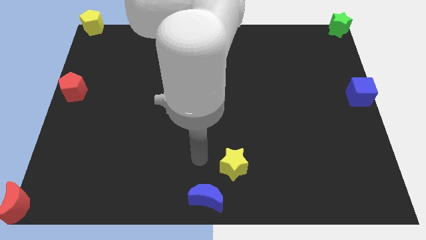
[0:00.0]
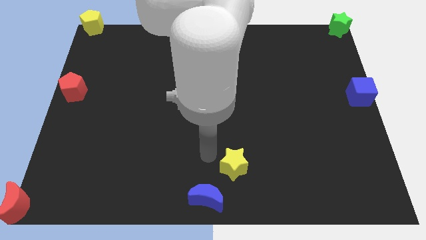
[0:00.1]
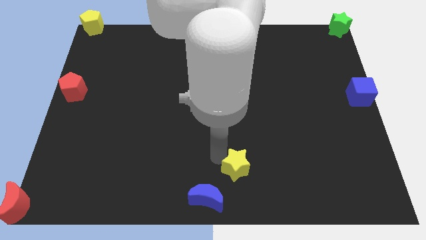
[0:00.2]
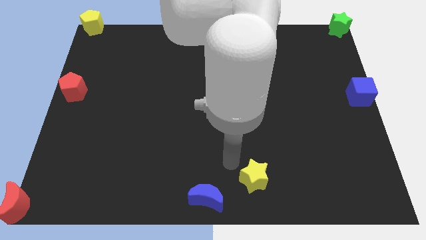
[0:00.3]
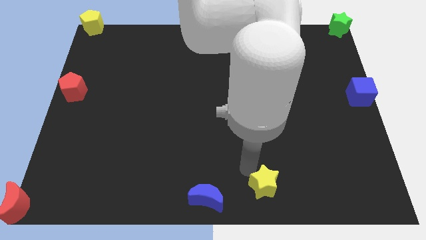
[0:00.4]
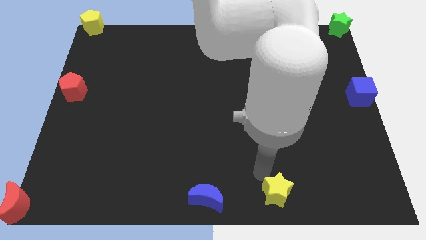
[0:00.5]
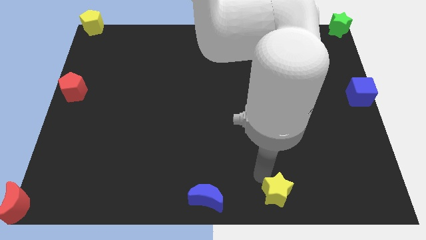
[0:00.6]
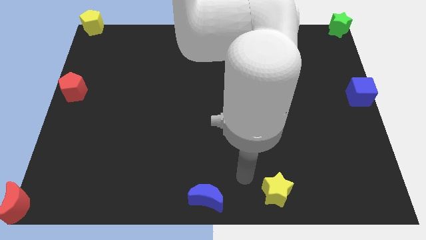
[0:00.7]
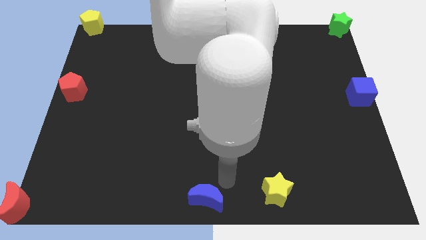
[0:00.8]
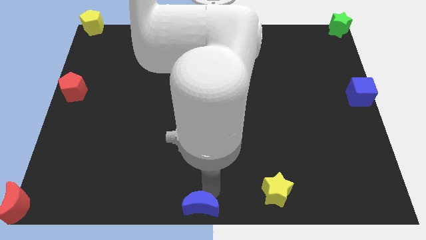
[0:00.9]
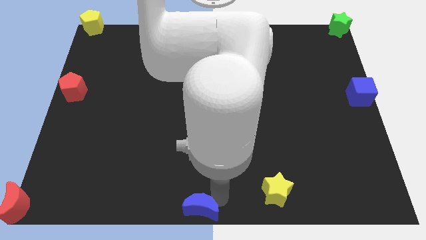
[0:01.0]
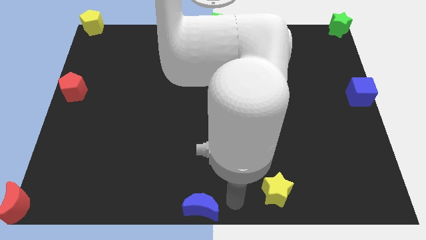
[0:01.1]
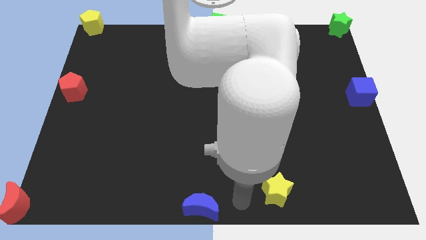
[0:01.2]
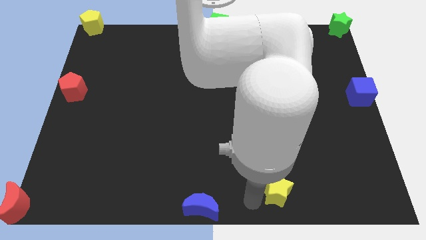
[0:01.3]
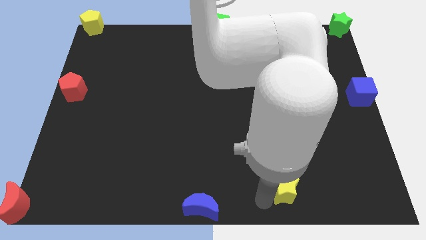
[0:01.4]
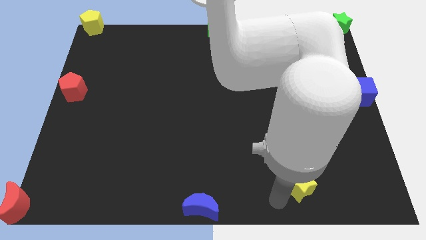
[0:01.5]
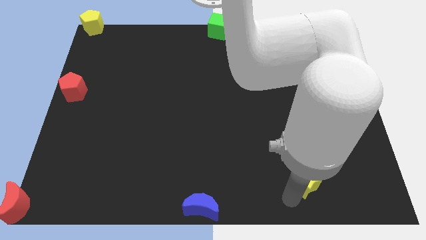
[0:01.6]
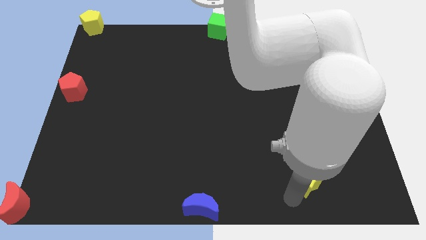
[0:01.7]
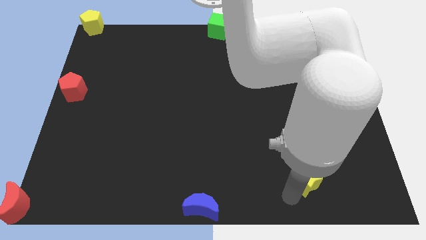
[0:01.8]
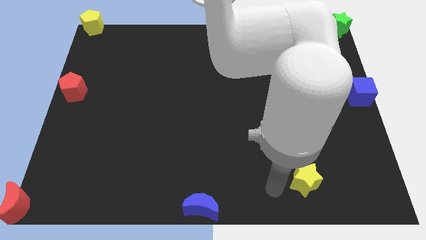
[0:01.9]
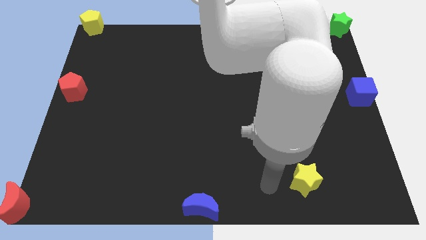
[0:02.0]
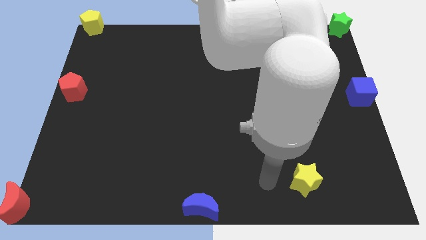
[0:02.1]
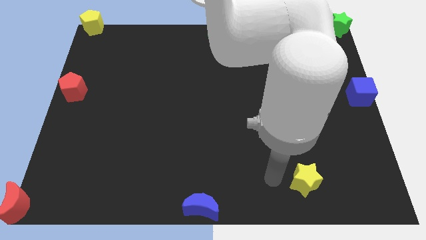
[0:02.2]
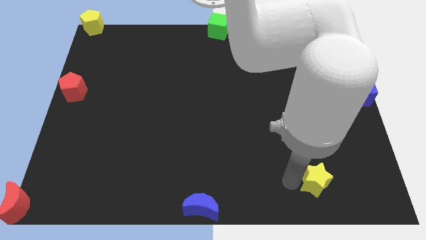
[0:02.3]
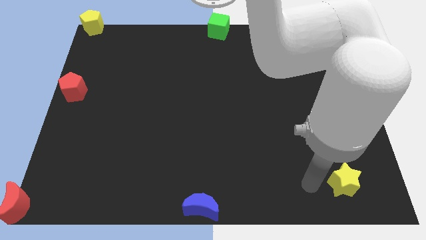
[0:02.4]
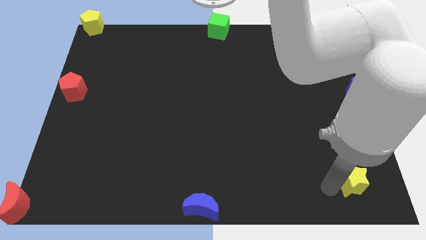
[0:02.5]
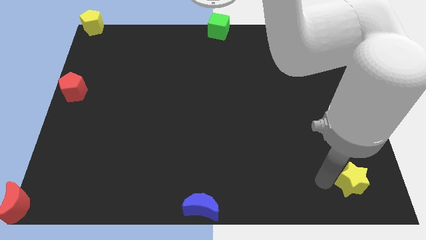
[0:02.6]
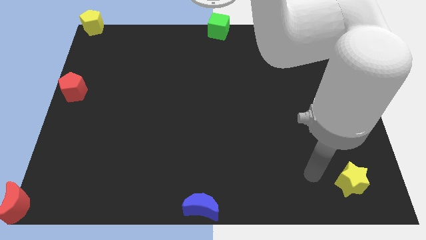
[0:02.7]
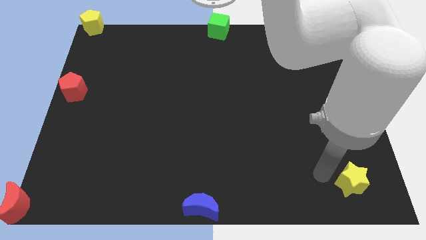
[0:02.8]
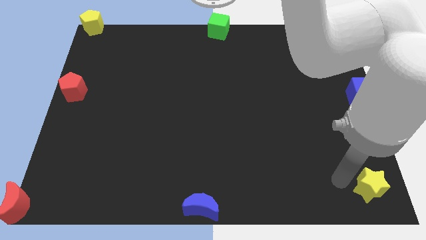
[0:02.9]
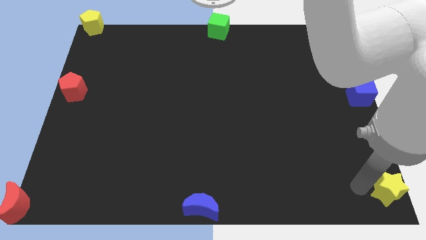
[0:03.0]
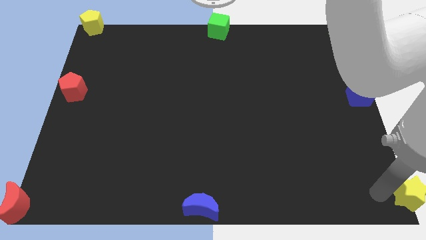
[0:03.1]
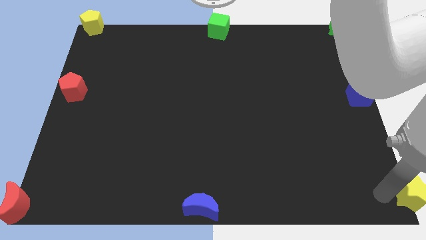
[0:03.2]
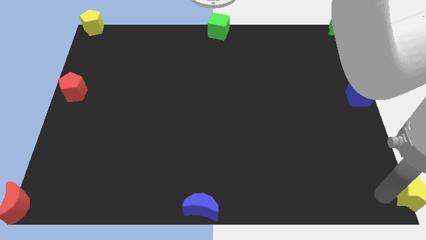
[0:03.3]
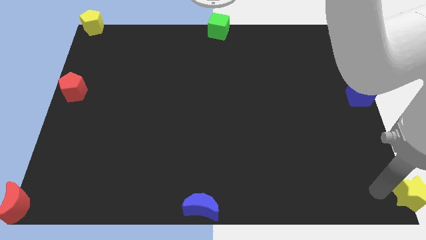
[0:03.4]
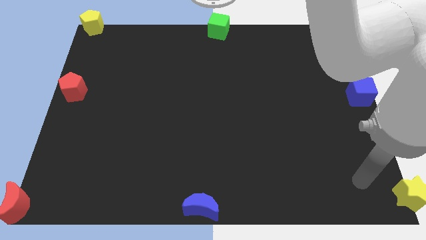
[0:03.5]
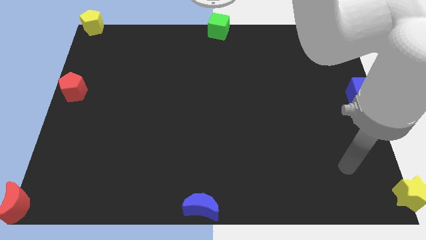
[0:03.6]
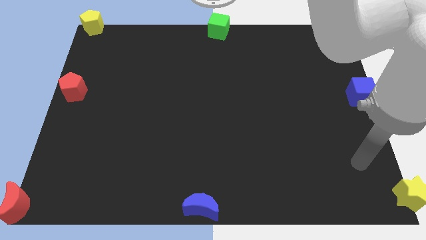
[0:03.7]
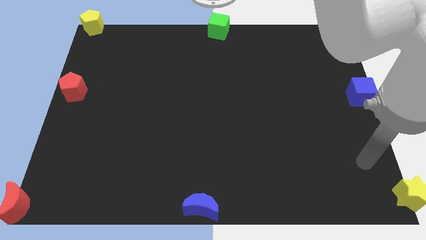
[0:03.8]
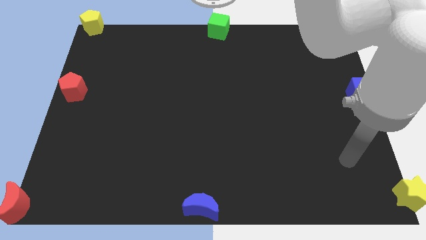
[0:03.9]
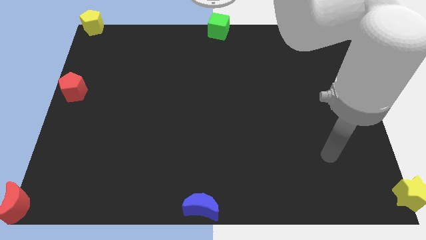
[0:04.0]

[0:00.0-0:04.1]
push the yellow star to the bottom right corner of the board

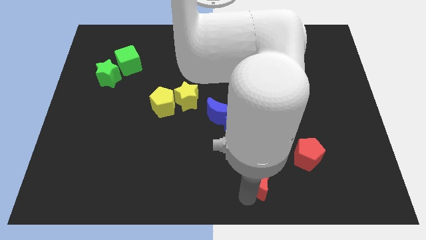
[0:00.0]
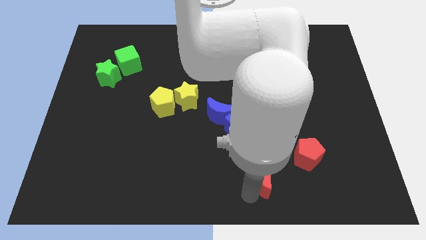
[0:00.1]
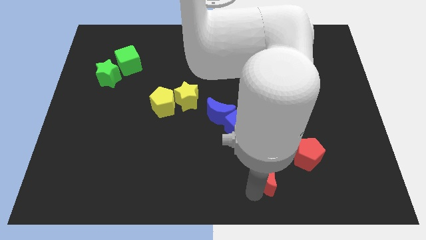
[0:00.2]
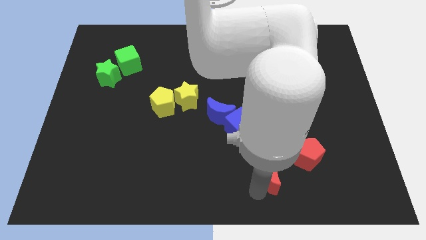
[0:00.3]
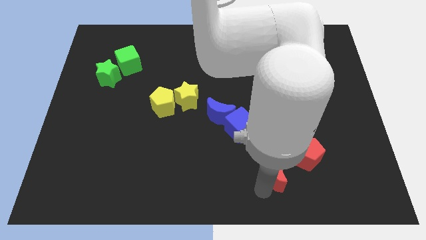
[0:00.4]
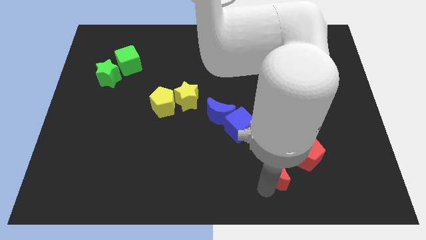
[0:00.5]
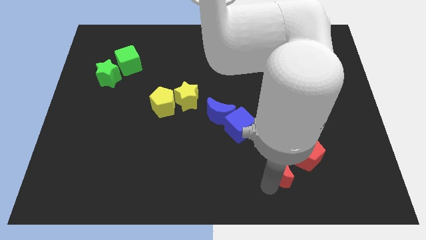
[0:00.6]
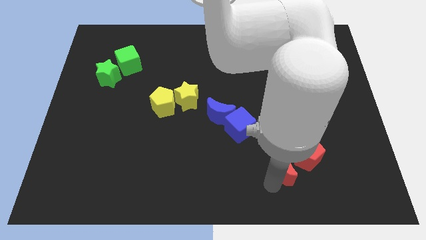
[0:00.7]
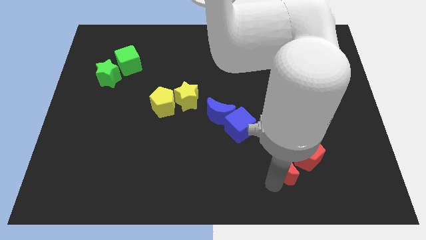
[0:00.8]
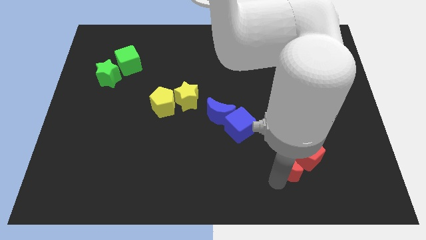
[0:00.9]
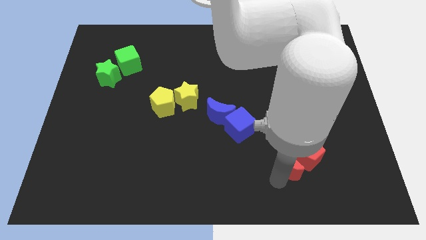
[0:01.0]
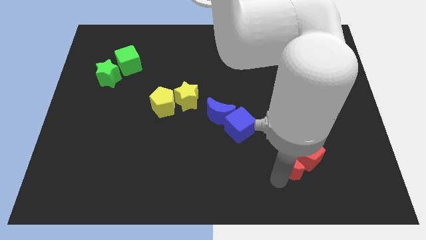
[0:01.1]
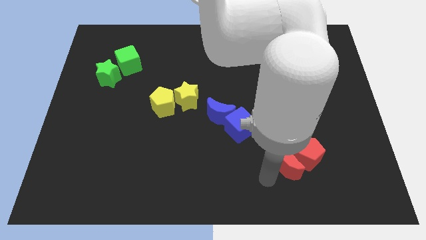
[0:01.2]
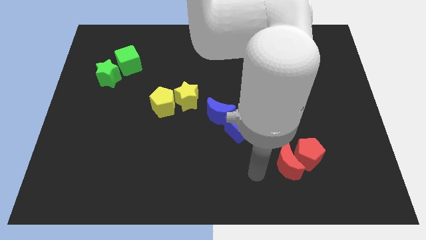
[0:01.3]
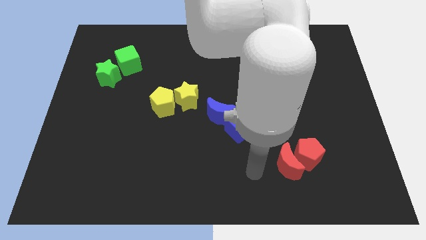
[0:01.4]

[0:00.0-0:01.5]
push the red crescent to the left side of the red pentagon

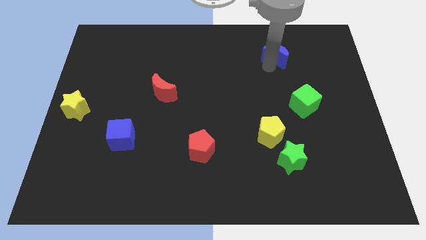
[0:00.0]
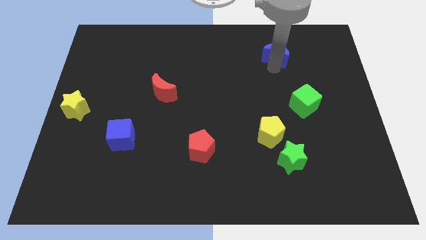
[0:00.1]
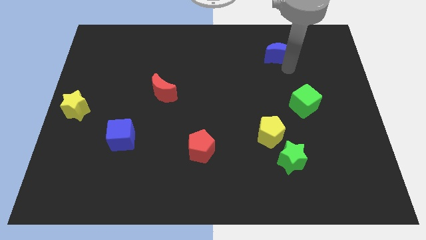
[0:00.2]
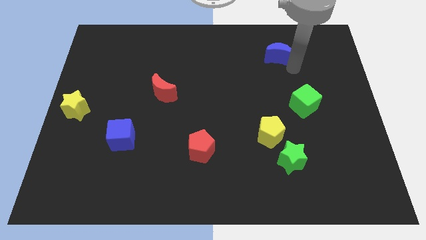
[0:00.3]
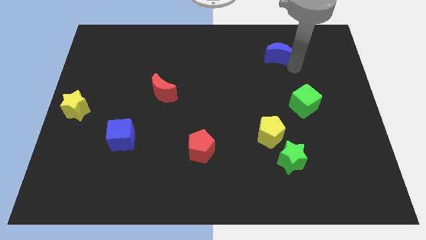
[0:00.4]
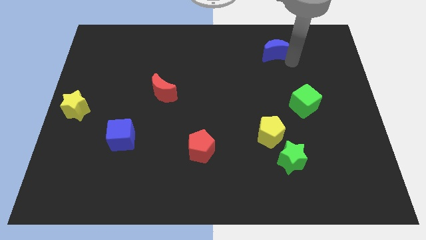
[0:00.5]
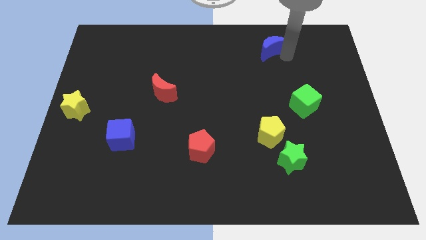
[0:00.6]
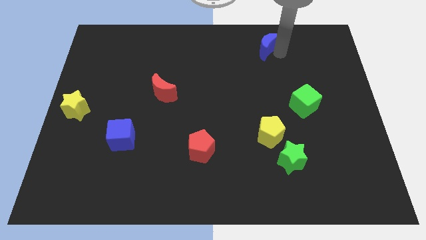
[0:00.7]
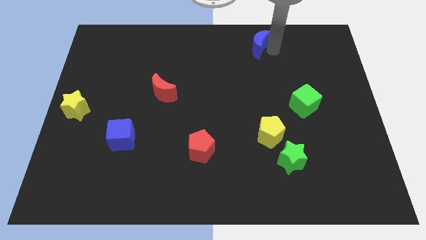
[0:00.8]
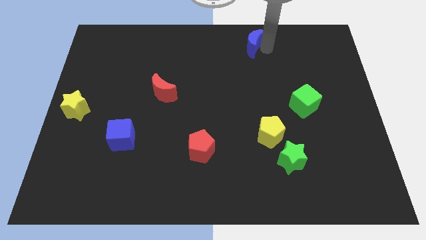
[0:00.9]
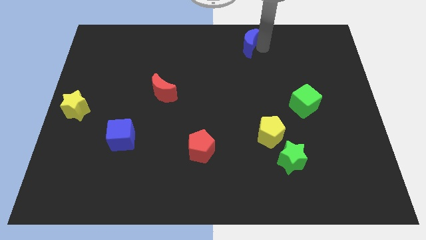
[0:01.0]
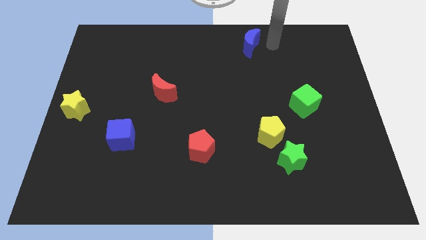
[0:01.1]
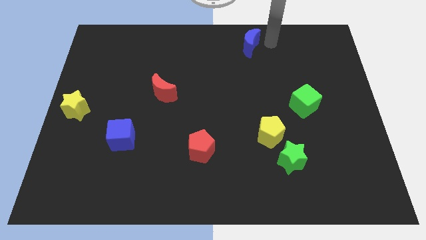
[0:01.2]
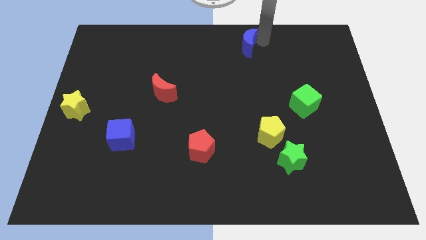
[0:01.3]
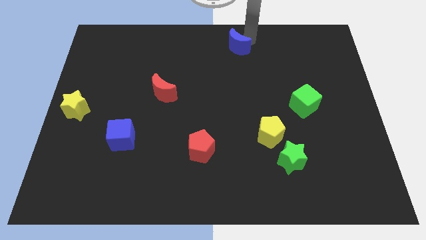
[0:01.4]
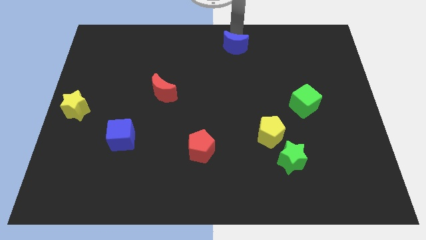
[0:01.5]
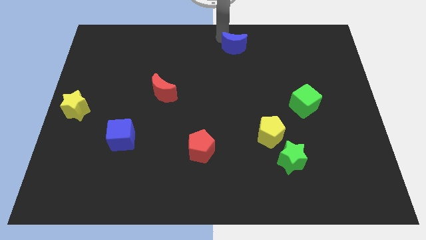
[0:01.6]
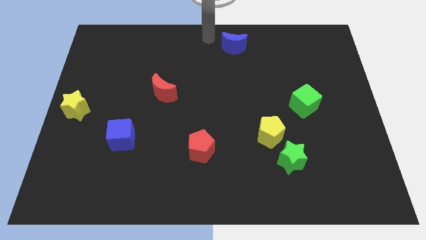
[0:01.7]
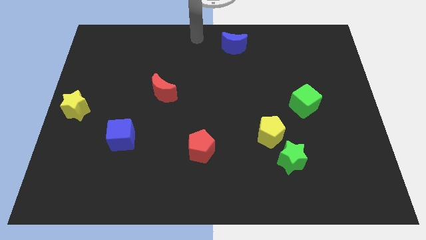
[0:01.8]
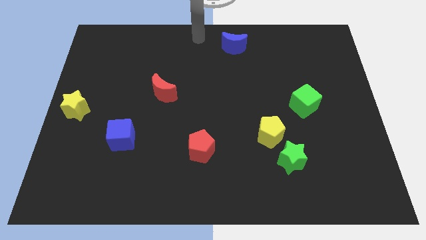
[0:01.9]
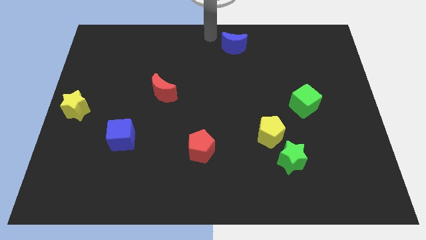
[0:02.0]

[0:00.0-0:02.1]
push blue moon to the top center

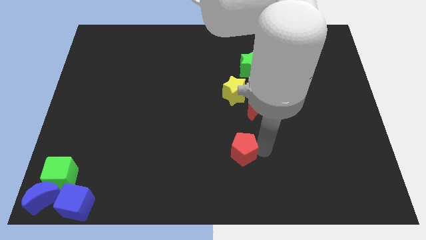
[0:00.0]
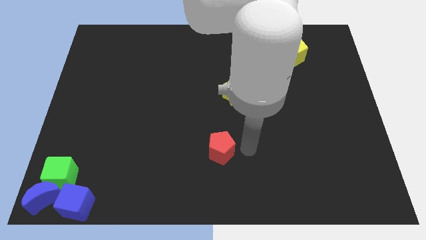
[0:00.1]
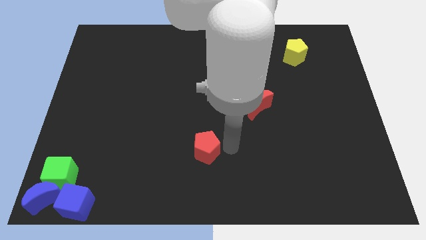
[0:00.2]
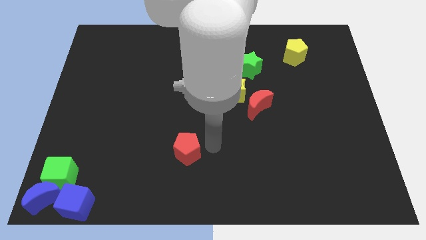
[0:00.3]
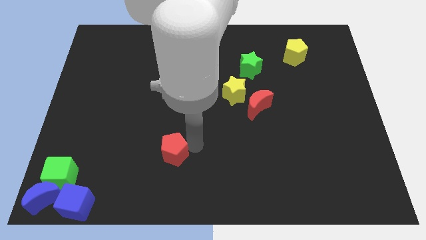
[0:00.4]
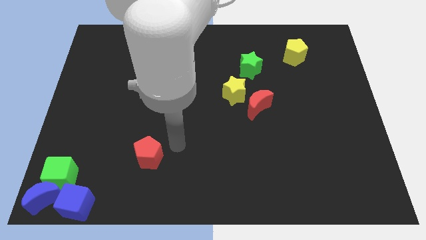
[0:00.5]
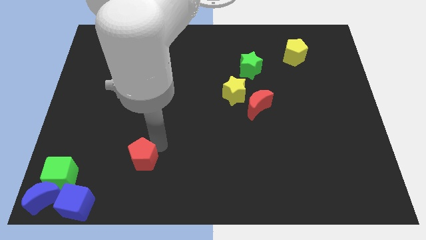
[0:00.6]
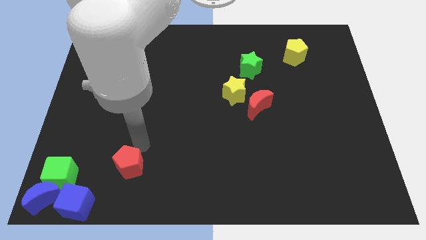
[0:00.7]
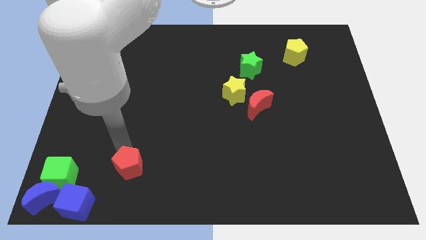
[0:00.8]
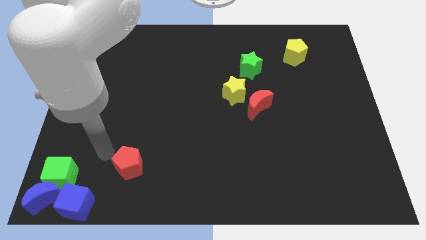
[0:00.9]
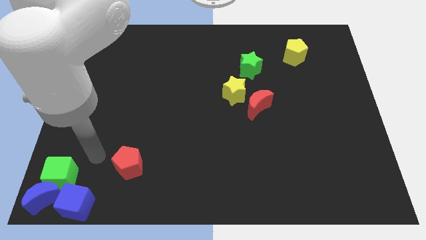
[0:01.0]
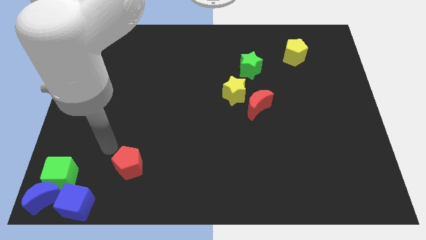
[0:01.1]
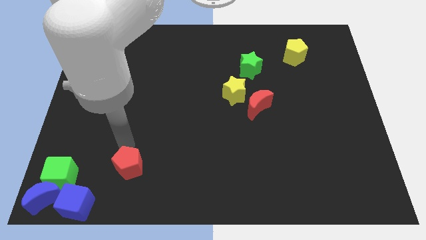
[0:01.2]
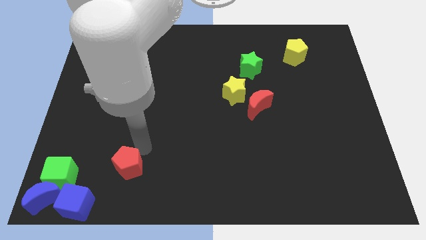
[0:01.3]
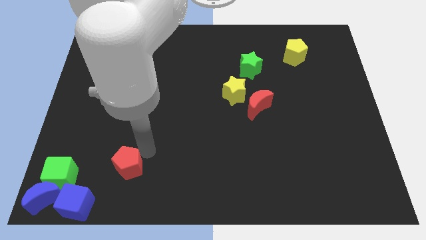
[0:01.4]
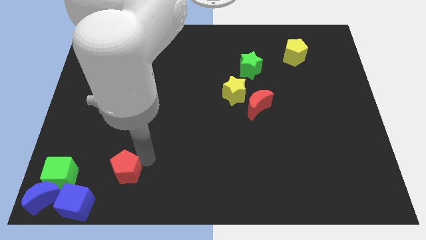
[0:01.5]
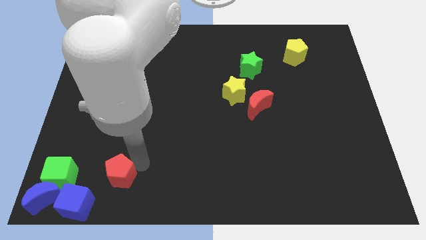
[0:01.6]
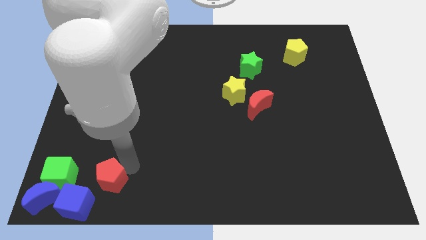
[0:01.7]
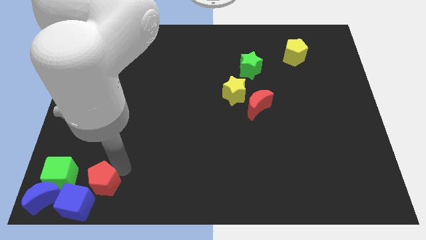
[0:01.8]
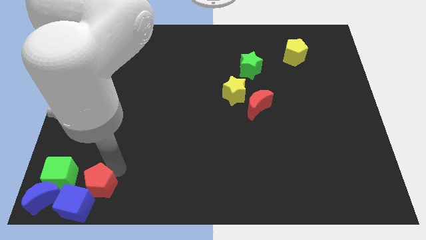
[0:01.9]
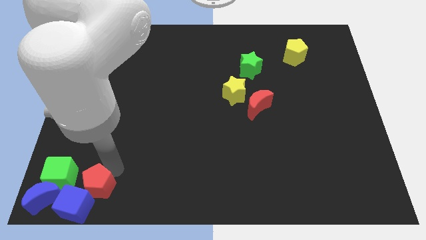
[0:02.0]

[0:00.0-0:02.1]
move red pentagon into blue cube
